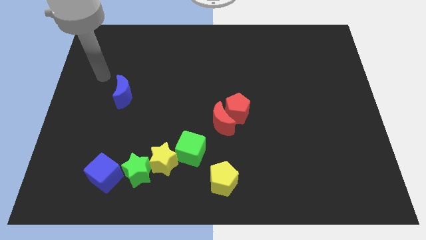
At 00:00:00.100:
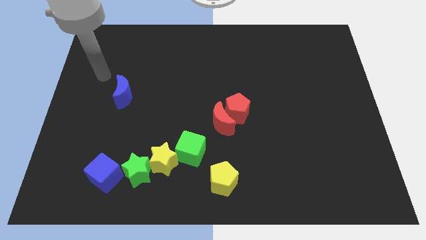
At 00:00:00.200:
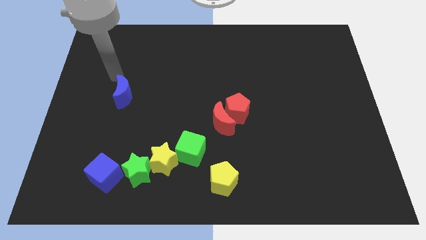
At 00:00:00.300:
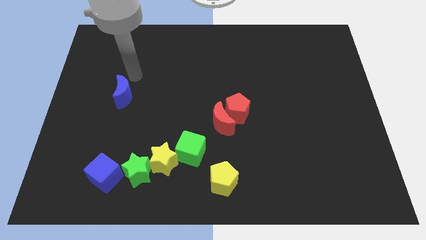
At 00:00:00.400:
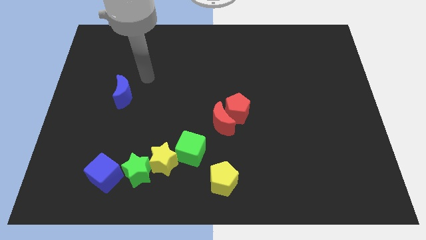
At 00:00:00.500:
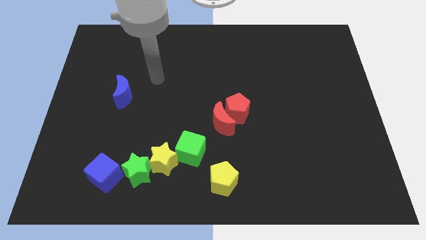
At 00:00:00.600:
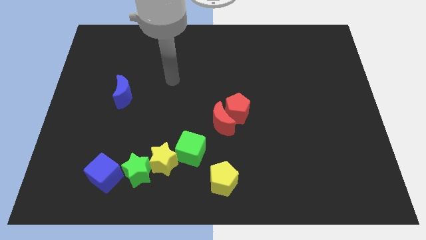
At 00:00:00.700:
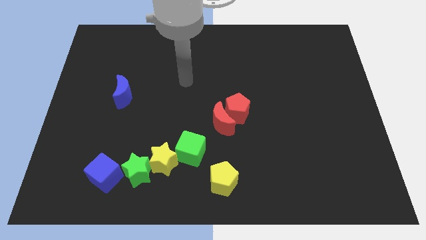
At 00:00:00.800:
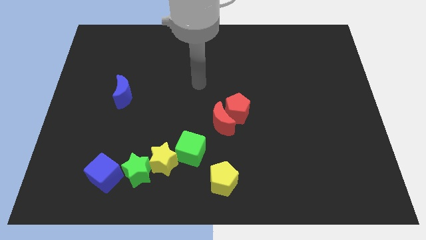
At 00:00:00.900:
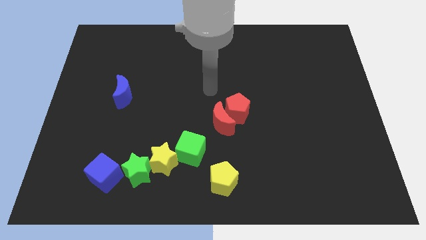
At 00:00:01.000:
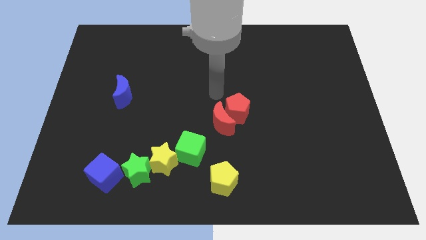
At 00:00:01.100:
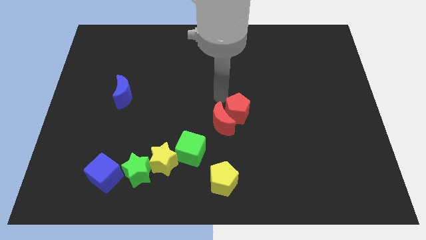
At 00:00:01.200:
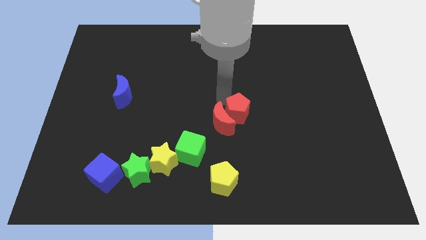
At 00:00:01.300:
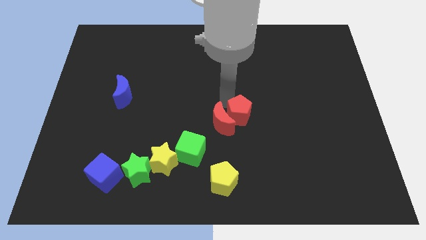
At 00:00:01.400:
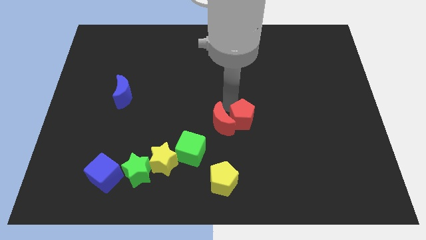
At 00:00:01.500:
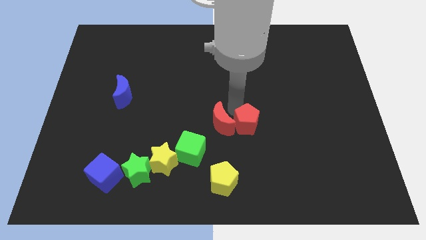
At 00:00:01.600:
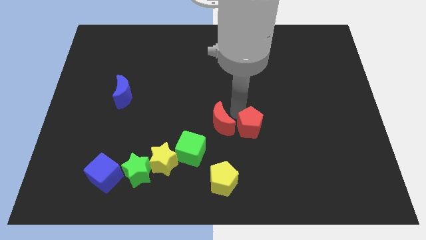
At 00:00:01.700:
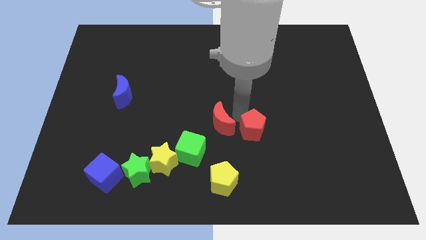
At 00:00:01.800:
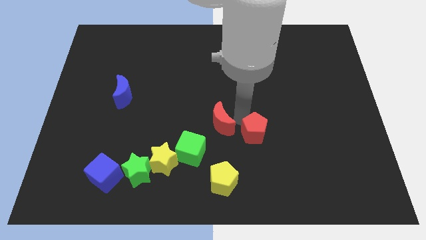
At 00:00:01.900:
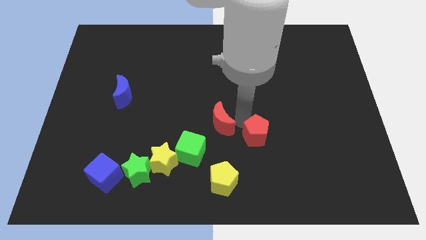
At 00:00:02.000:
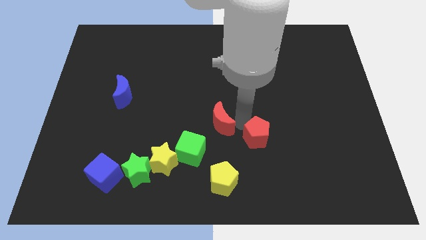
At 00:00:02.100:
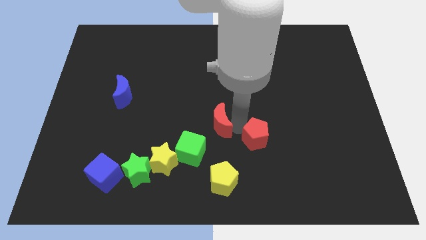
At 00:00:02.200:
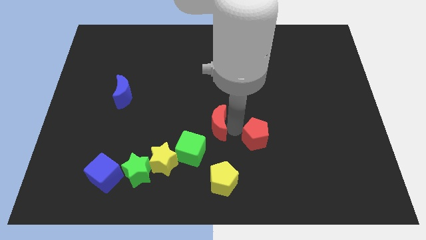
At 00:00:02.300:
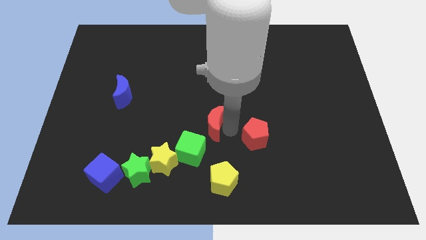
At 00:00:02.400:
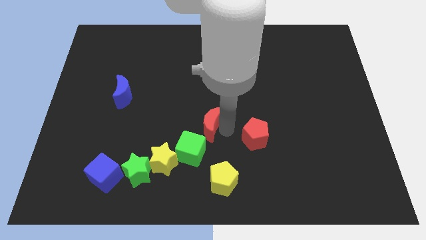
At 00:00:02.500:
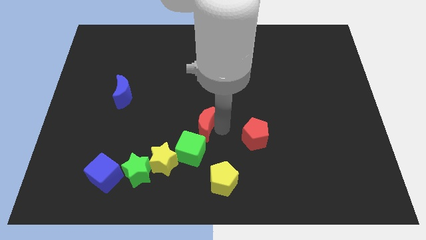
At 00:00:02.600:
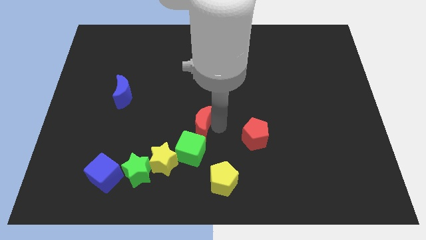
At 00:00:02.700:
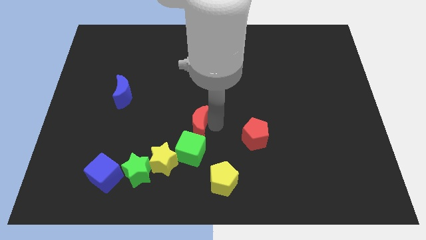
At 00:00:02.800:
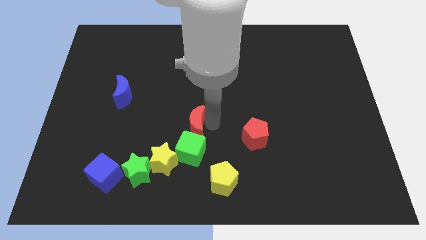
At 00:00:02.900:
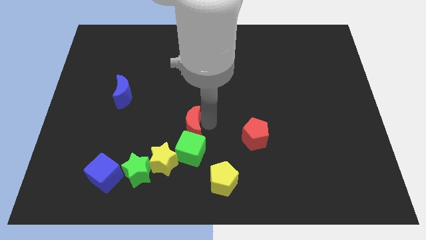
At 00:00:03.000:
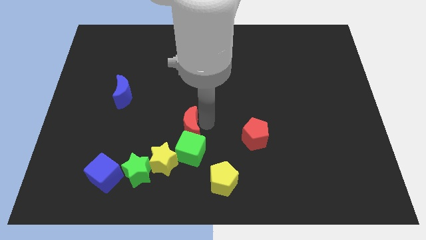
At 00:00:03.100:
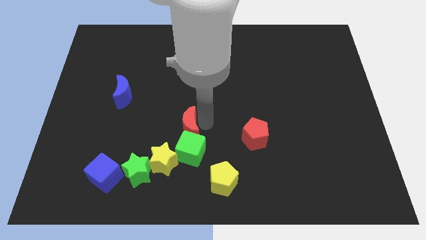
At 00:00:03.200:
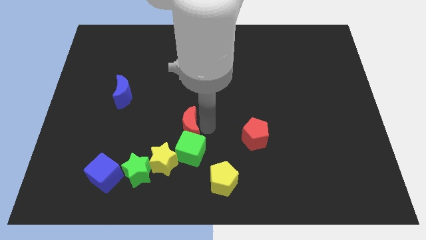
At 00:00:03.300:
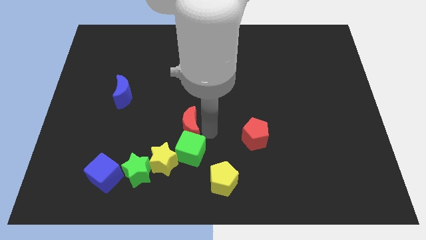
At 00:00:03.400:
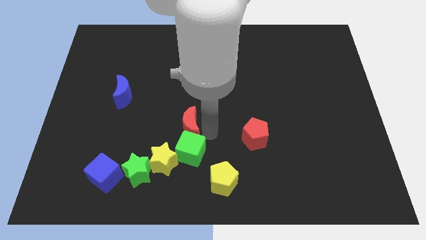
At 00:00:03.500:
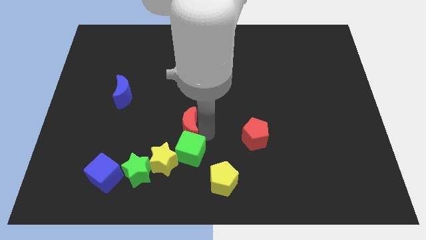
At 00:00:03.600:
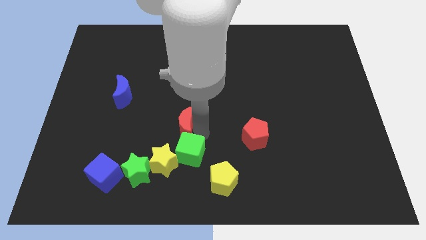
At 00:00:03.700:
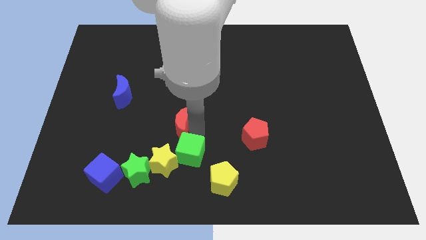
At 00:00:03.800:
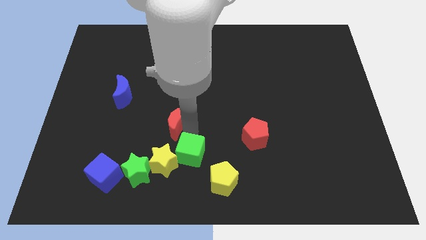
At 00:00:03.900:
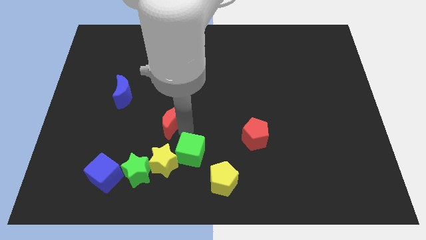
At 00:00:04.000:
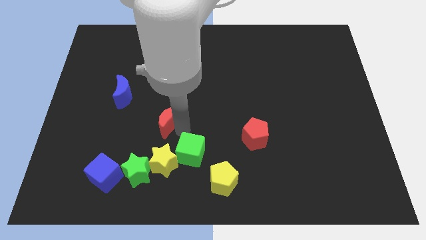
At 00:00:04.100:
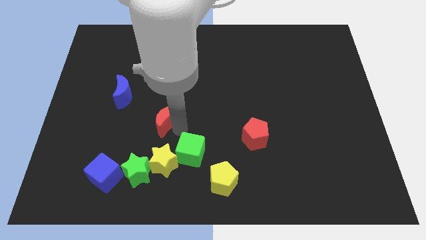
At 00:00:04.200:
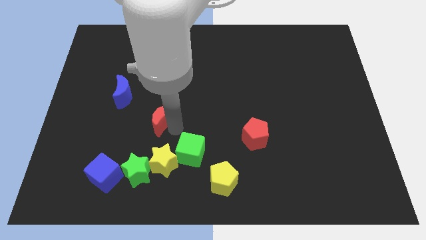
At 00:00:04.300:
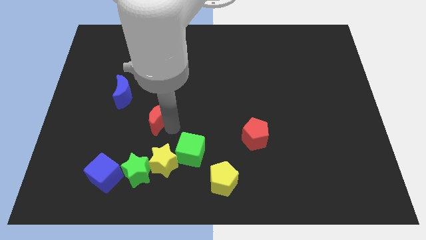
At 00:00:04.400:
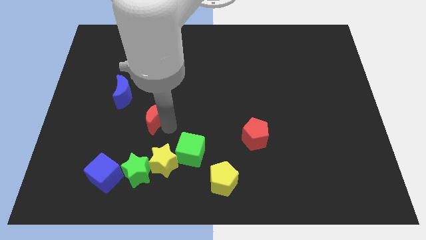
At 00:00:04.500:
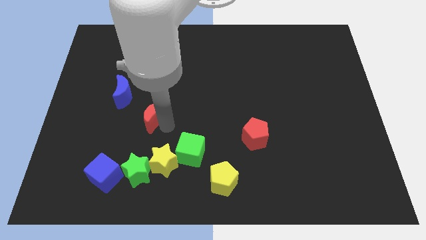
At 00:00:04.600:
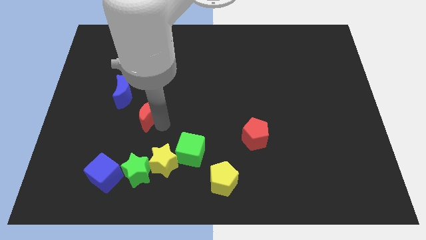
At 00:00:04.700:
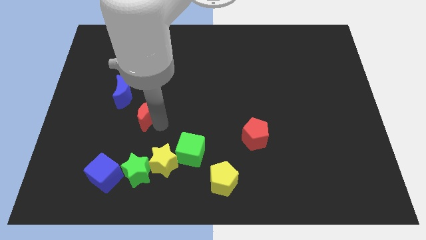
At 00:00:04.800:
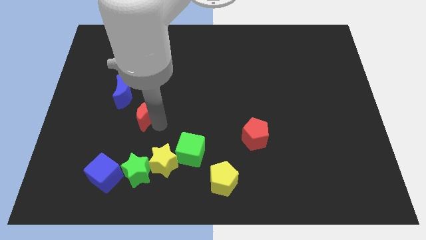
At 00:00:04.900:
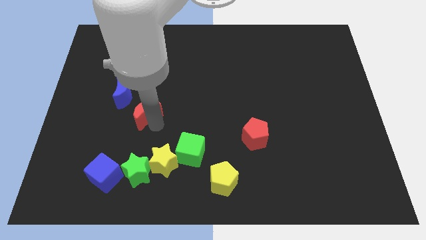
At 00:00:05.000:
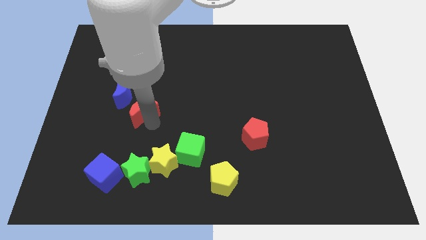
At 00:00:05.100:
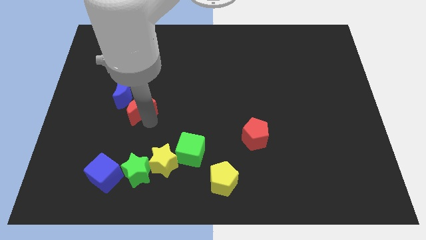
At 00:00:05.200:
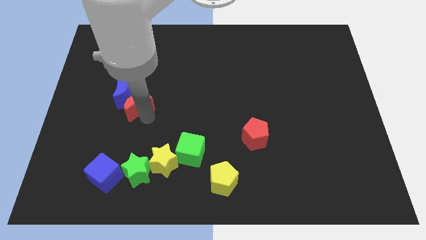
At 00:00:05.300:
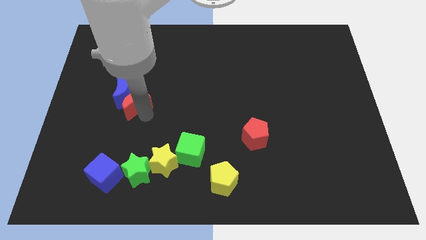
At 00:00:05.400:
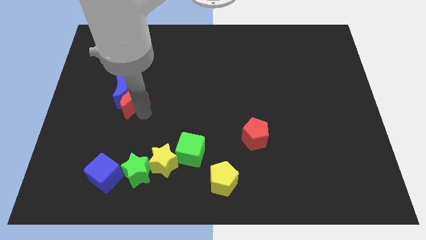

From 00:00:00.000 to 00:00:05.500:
move the red moon close to the blue moon

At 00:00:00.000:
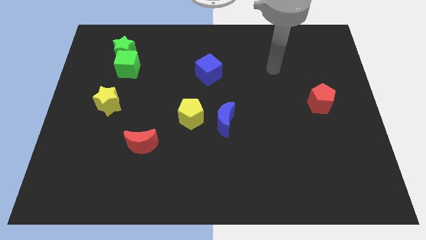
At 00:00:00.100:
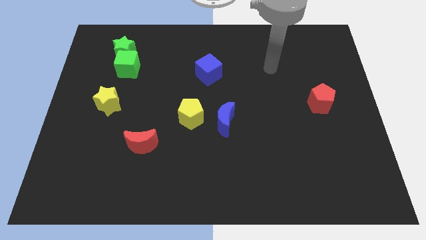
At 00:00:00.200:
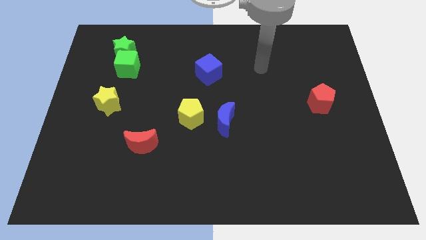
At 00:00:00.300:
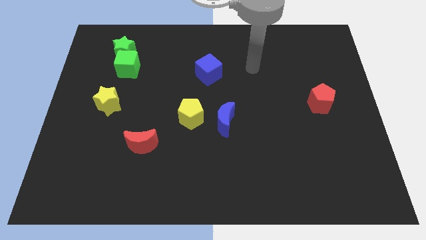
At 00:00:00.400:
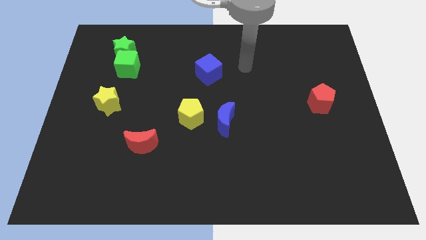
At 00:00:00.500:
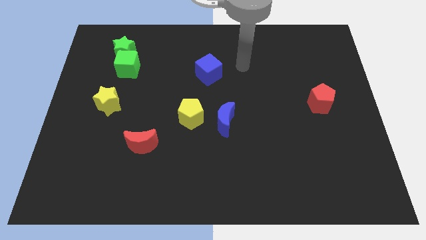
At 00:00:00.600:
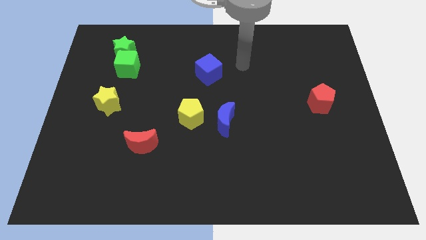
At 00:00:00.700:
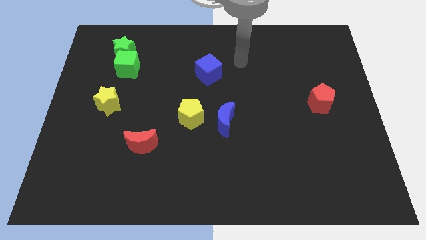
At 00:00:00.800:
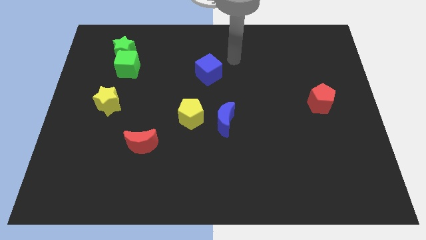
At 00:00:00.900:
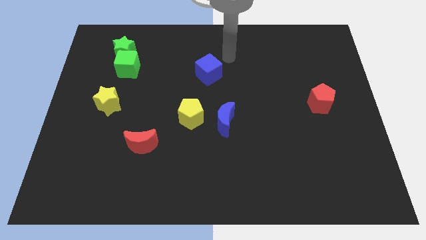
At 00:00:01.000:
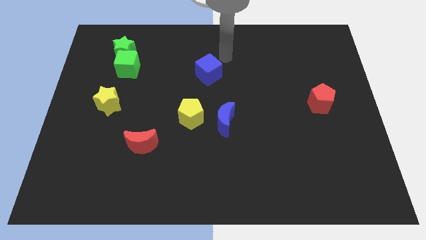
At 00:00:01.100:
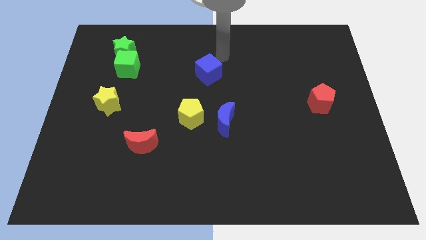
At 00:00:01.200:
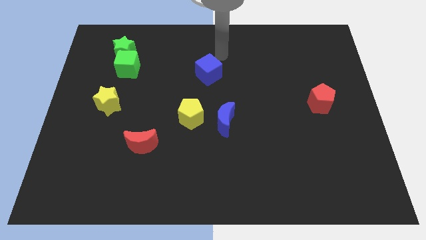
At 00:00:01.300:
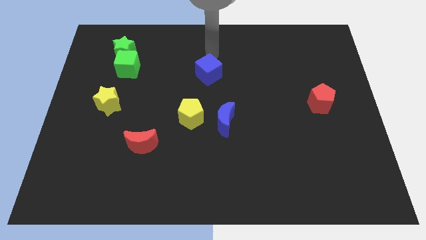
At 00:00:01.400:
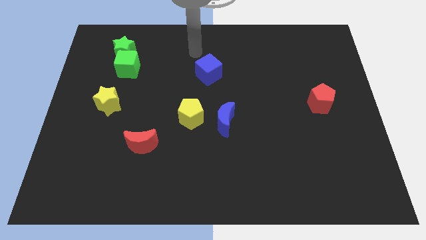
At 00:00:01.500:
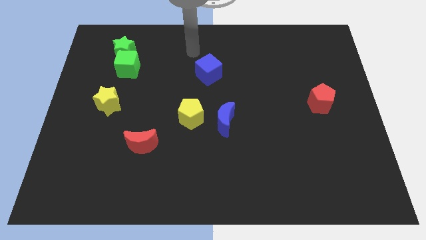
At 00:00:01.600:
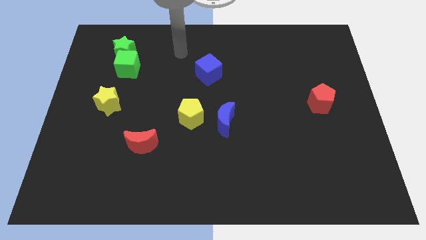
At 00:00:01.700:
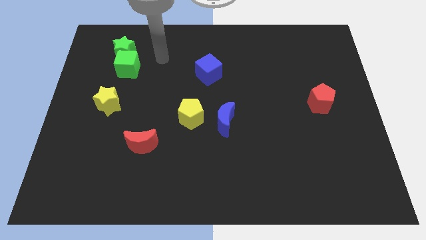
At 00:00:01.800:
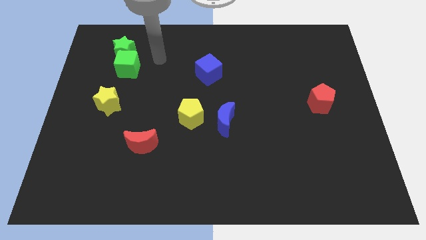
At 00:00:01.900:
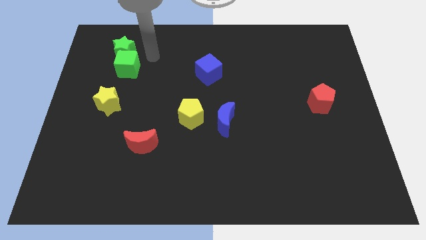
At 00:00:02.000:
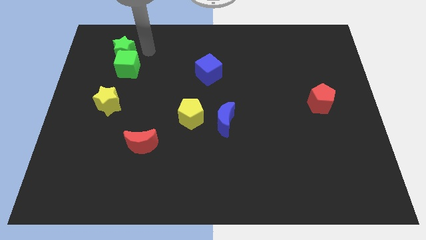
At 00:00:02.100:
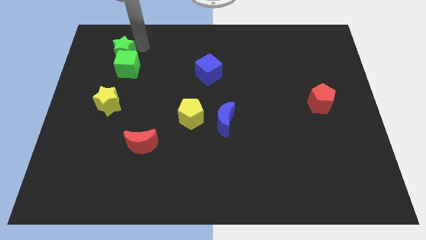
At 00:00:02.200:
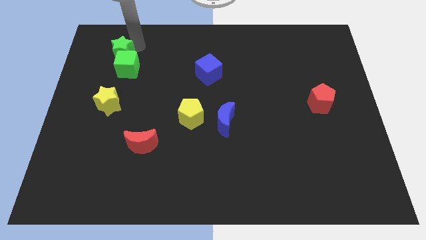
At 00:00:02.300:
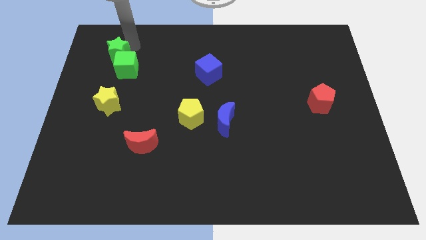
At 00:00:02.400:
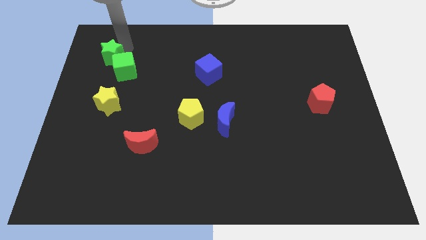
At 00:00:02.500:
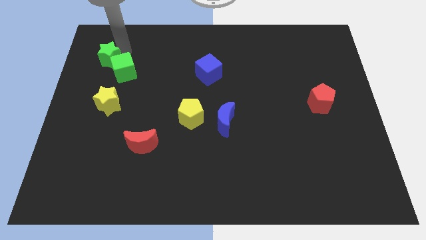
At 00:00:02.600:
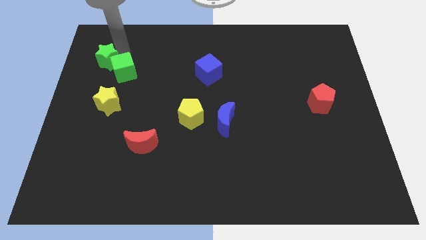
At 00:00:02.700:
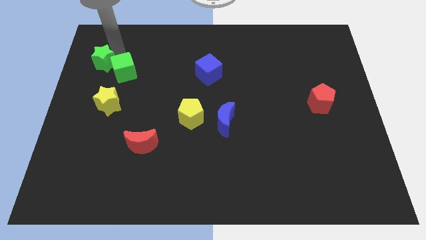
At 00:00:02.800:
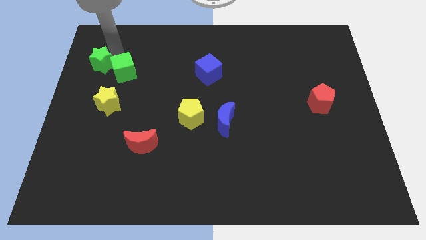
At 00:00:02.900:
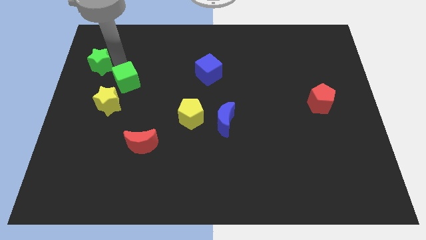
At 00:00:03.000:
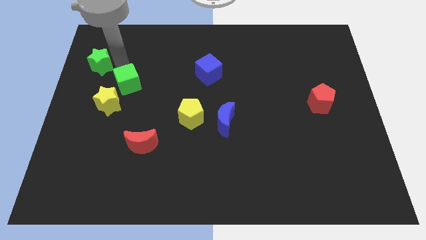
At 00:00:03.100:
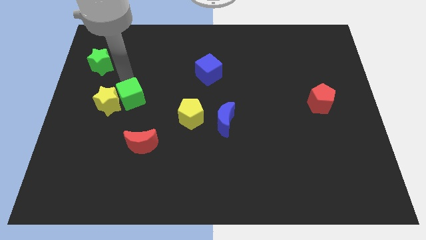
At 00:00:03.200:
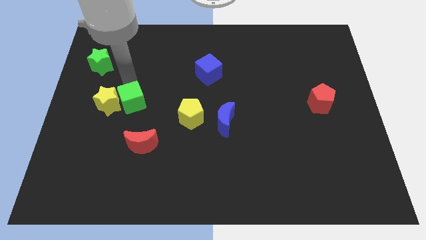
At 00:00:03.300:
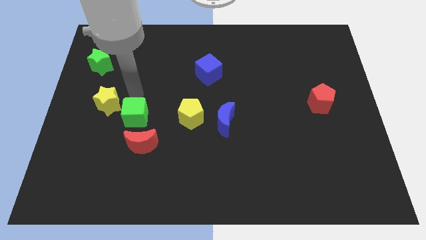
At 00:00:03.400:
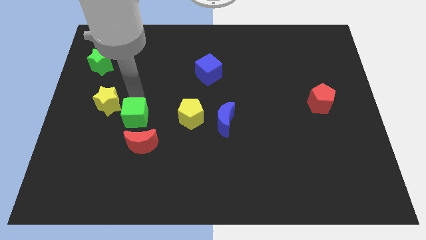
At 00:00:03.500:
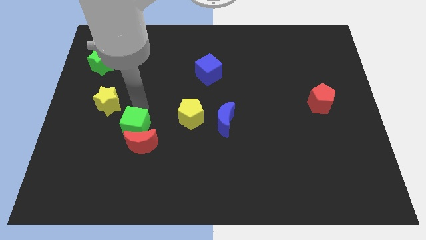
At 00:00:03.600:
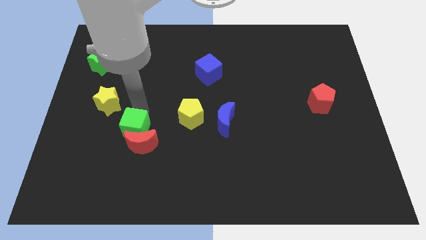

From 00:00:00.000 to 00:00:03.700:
push the green cube next to the red moon
